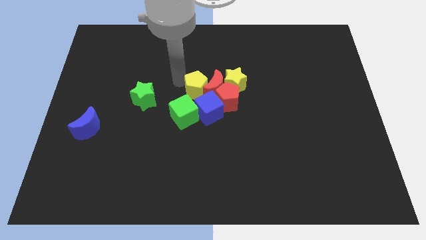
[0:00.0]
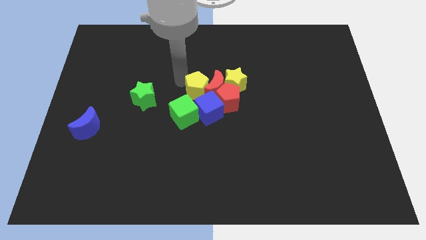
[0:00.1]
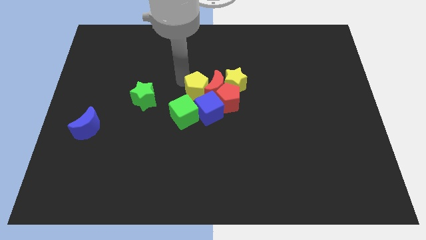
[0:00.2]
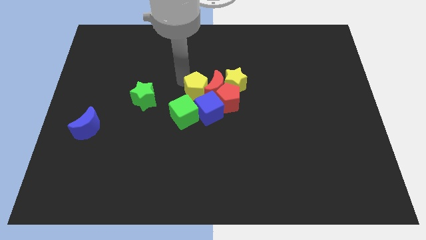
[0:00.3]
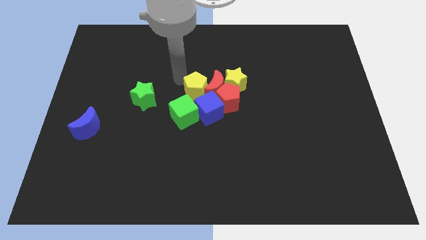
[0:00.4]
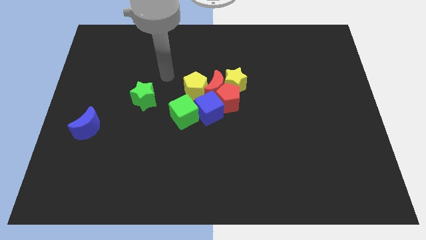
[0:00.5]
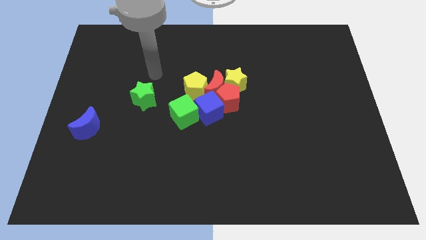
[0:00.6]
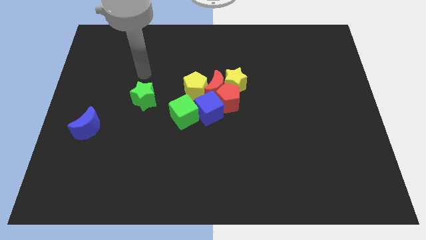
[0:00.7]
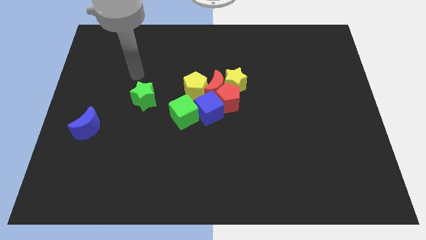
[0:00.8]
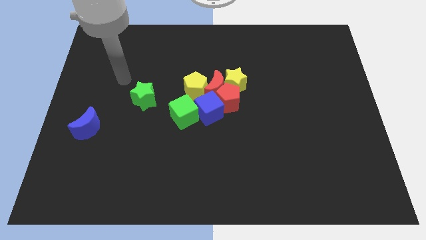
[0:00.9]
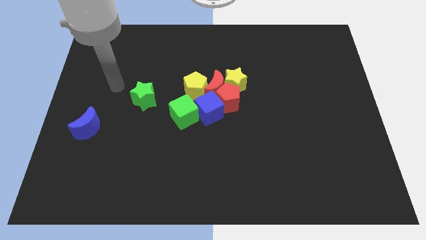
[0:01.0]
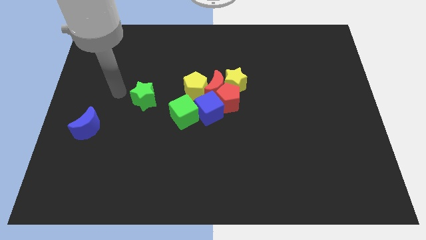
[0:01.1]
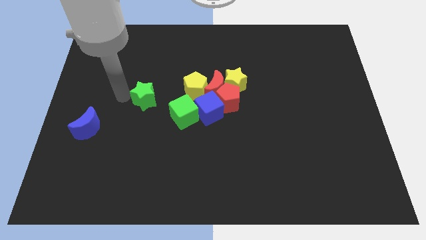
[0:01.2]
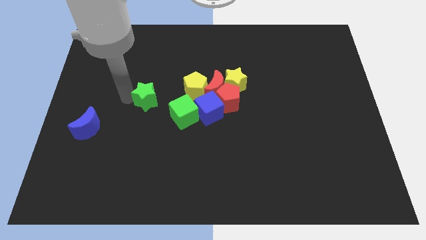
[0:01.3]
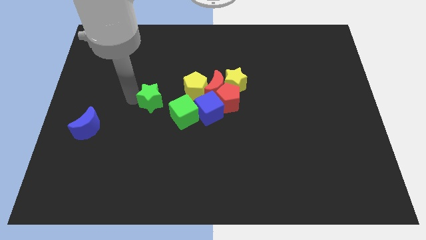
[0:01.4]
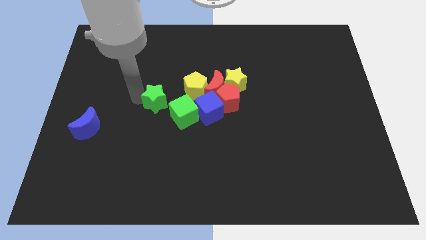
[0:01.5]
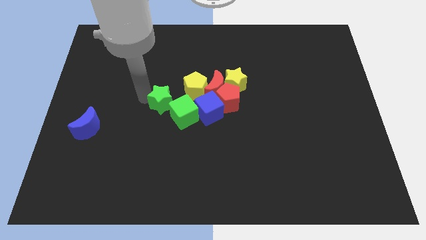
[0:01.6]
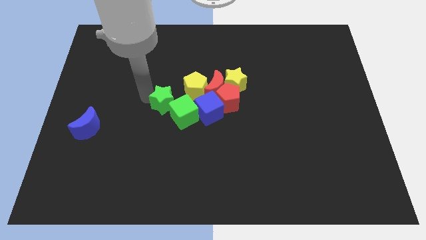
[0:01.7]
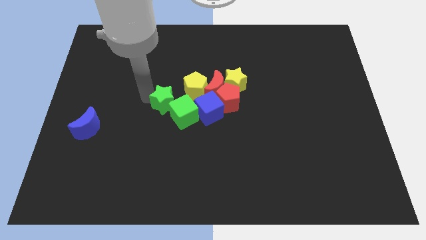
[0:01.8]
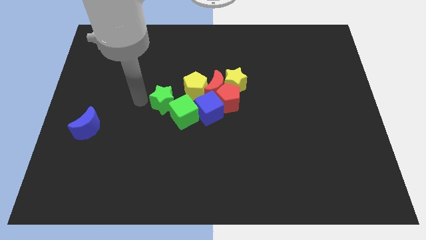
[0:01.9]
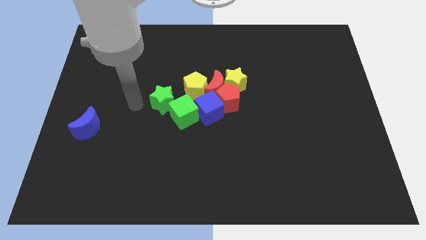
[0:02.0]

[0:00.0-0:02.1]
move the green star towards the top left of the green cube

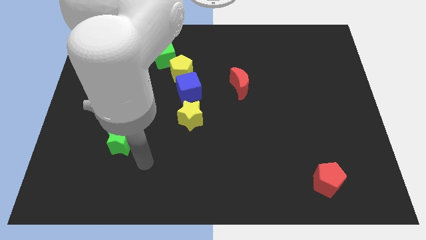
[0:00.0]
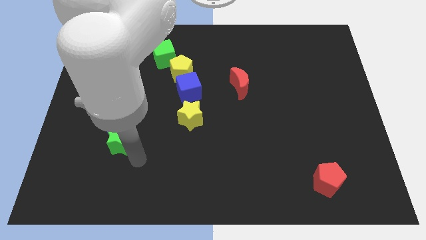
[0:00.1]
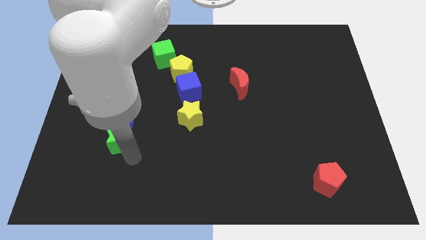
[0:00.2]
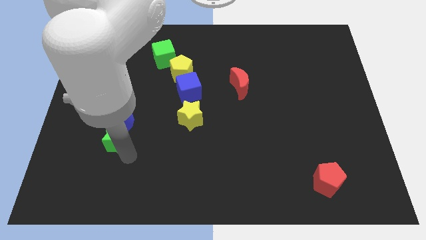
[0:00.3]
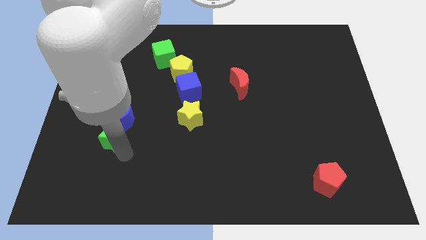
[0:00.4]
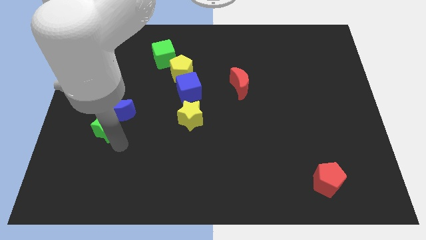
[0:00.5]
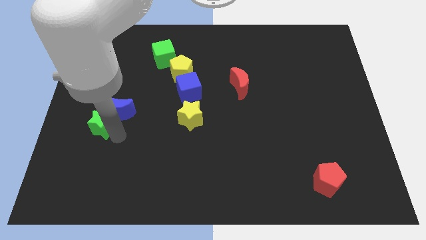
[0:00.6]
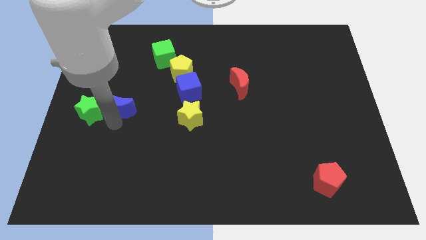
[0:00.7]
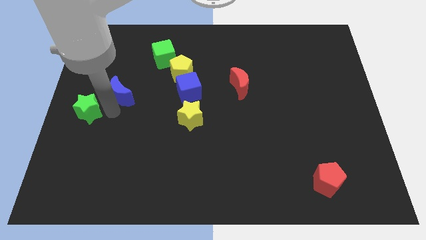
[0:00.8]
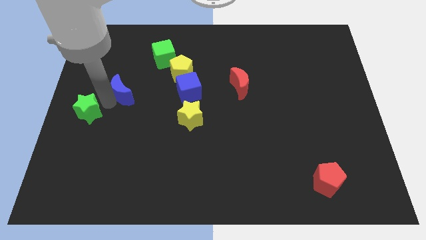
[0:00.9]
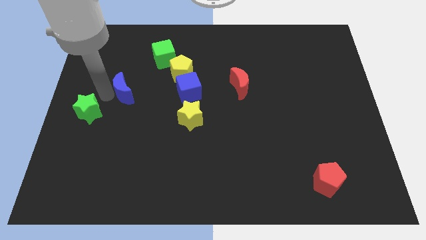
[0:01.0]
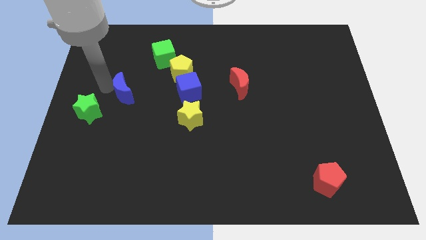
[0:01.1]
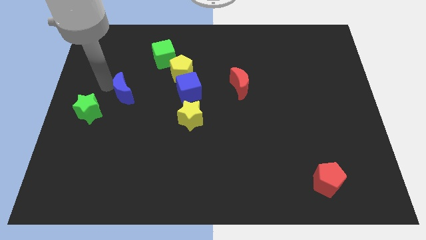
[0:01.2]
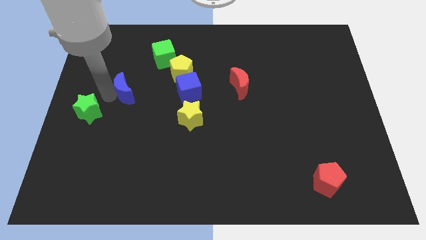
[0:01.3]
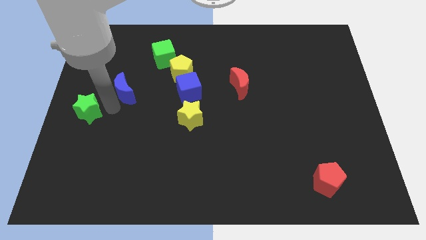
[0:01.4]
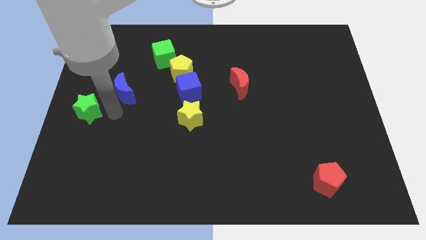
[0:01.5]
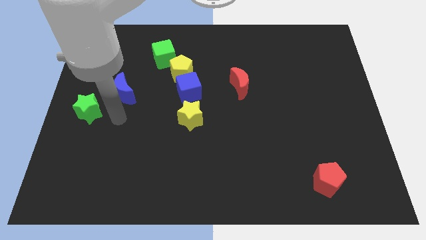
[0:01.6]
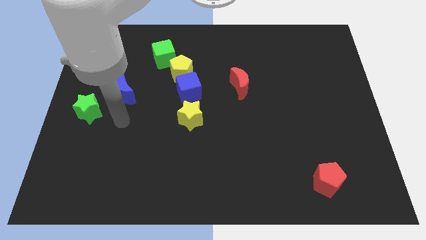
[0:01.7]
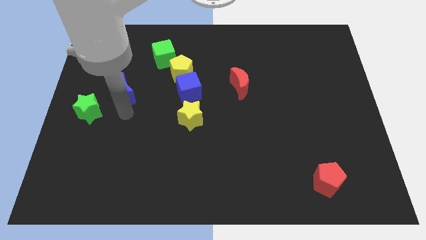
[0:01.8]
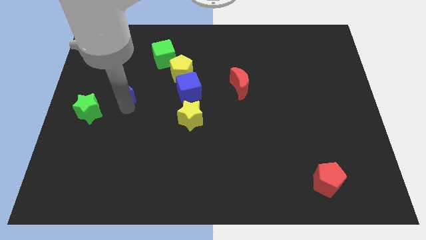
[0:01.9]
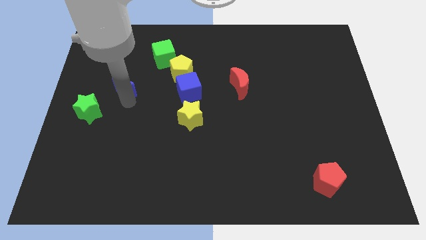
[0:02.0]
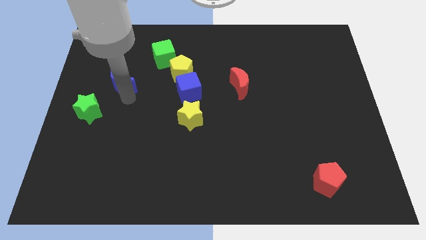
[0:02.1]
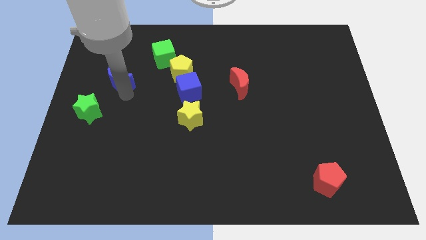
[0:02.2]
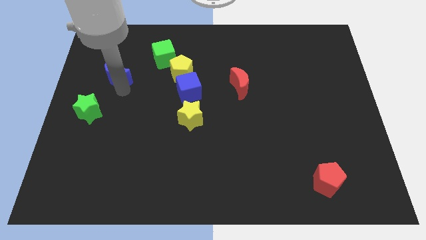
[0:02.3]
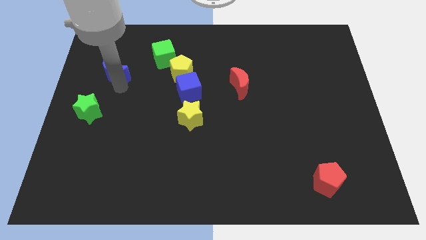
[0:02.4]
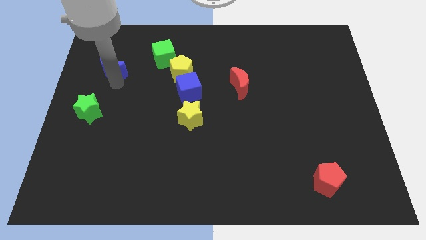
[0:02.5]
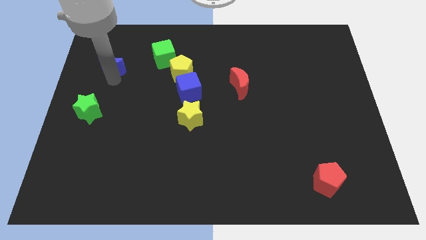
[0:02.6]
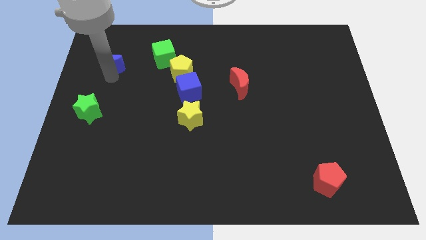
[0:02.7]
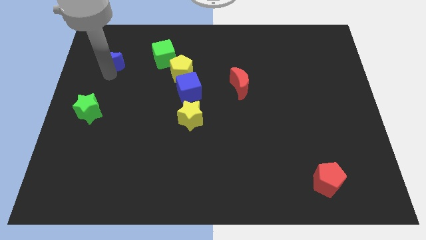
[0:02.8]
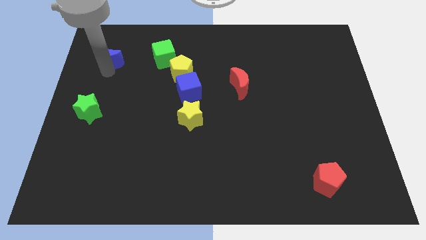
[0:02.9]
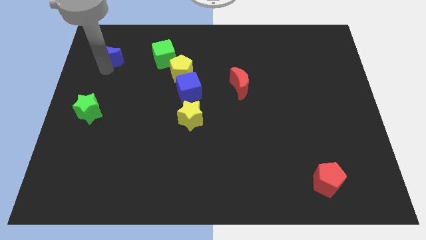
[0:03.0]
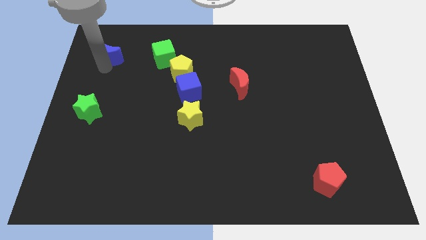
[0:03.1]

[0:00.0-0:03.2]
move blue moon parallel left to green cube

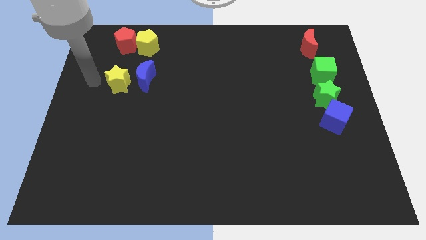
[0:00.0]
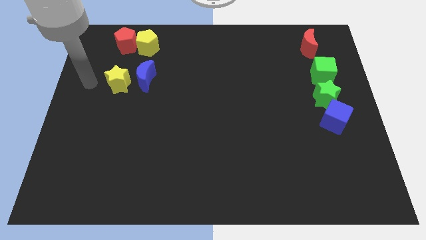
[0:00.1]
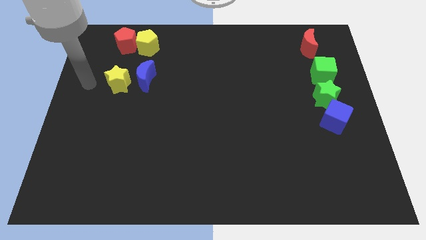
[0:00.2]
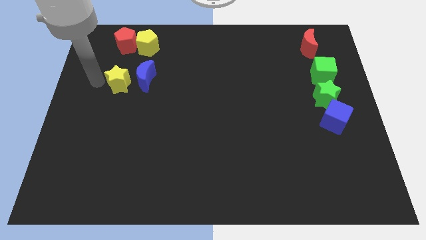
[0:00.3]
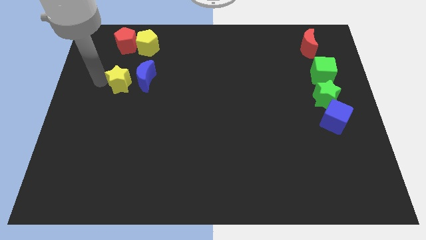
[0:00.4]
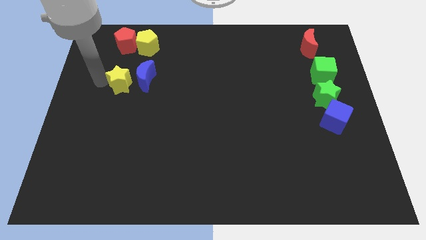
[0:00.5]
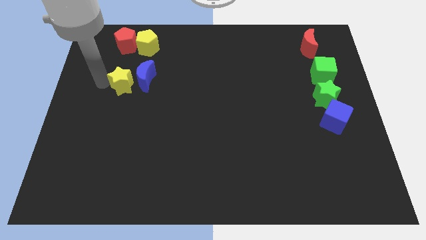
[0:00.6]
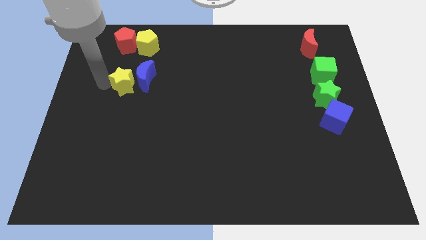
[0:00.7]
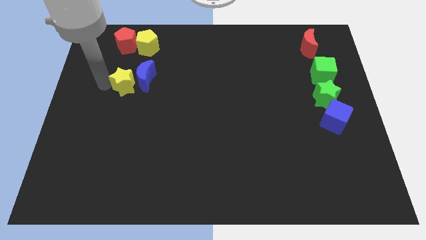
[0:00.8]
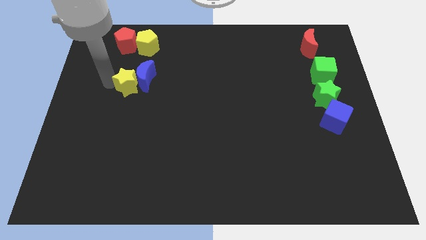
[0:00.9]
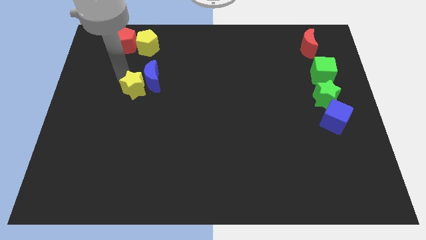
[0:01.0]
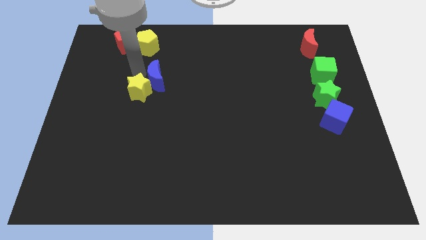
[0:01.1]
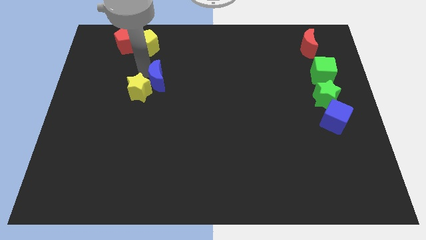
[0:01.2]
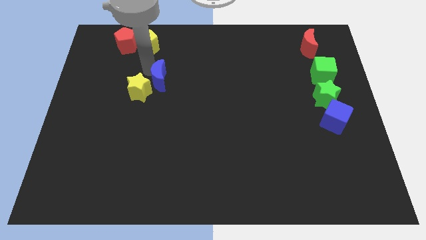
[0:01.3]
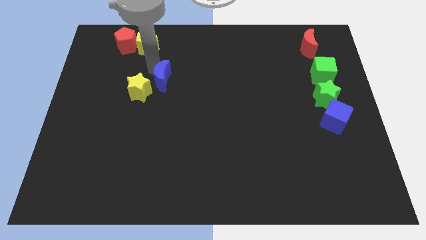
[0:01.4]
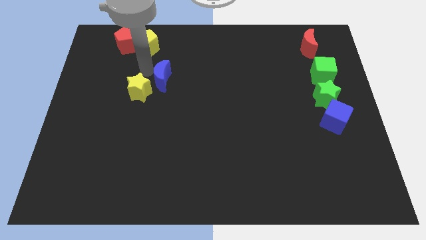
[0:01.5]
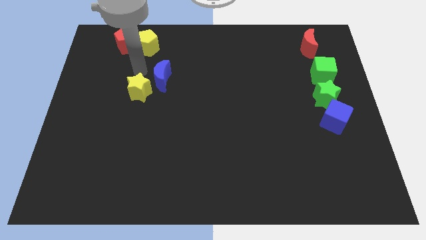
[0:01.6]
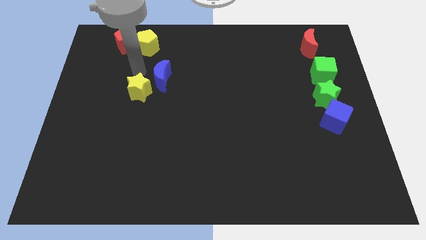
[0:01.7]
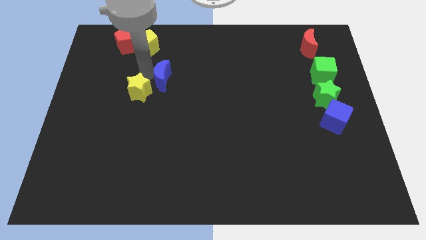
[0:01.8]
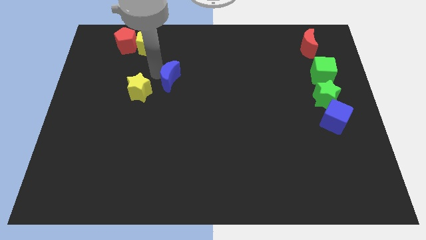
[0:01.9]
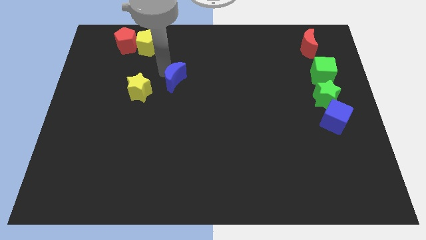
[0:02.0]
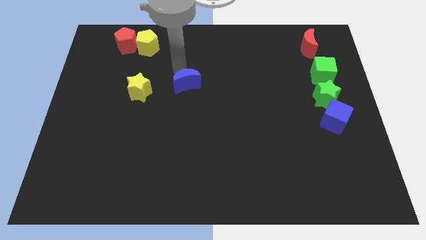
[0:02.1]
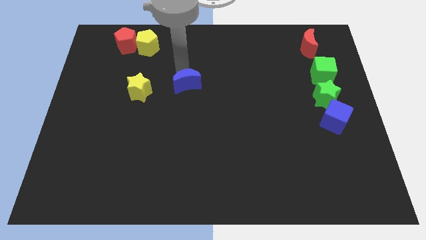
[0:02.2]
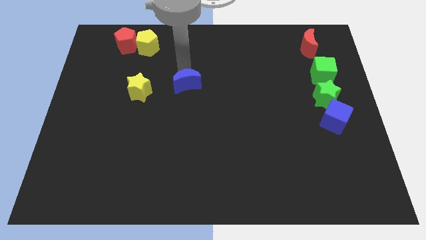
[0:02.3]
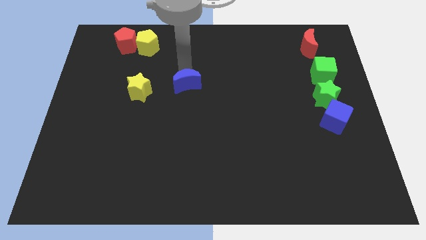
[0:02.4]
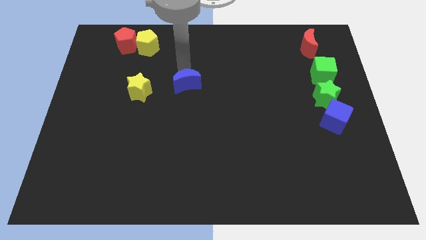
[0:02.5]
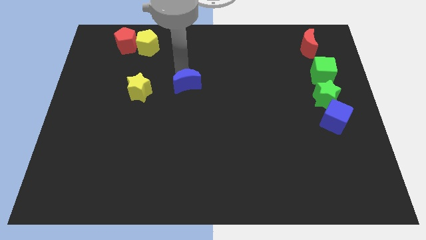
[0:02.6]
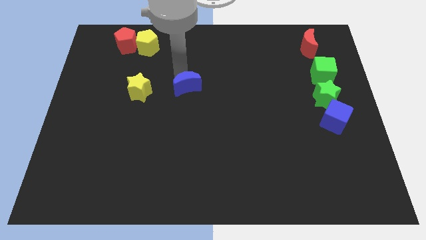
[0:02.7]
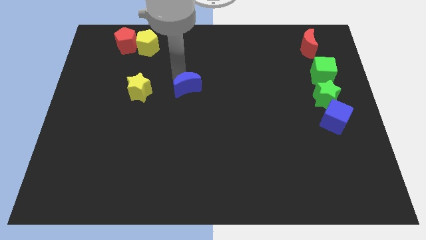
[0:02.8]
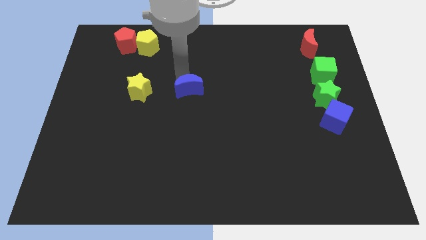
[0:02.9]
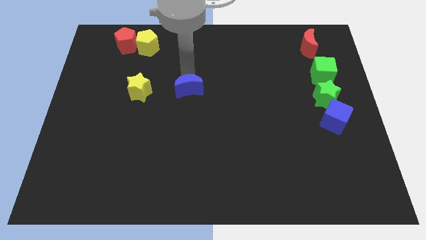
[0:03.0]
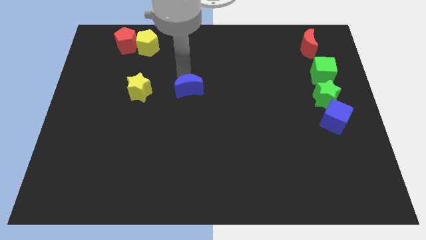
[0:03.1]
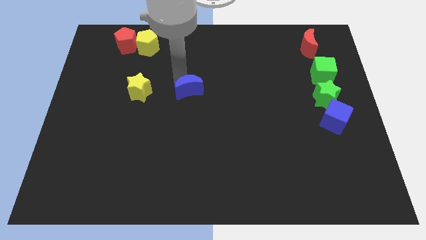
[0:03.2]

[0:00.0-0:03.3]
push blue crescent diagonal to the right of the yellow star

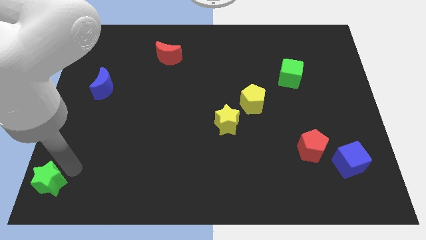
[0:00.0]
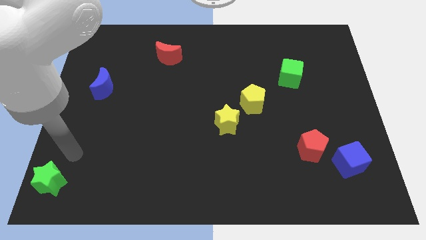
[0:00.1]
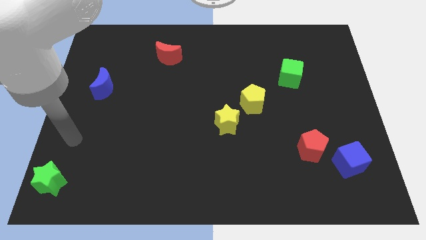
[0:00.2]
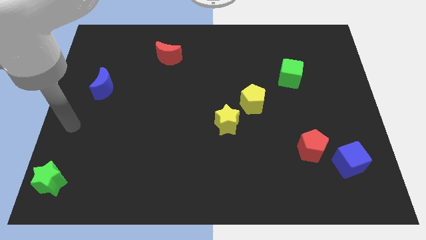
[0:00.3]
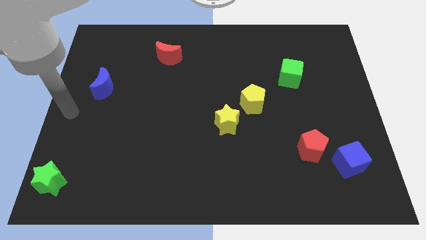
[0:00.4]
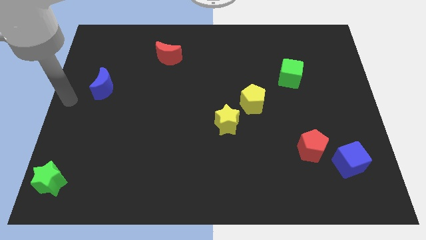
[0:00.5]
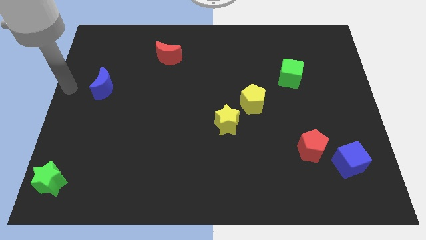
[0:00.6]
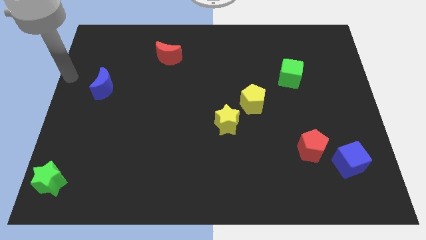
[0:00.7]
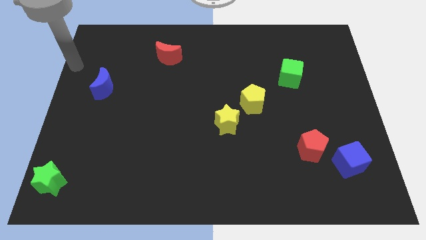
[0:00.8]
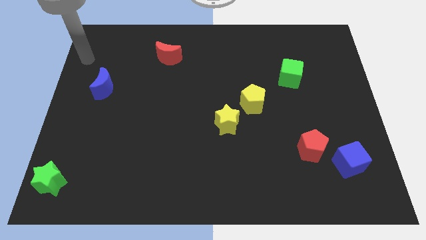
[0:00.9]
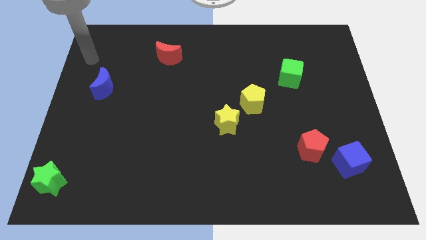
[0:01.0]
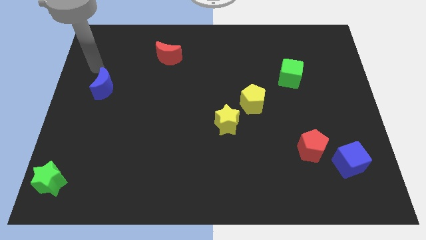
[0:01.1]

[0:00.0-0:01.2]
place the arm near the blue moon
